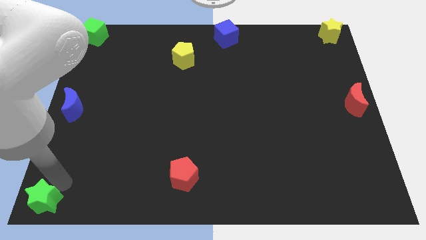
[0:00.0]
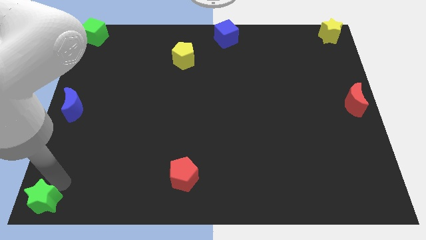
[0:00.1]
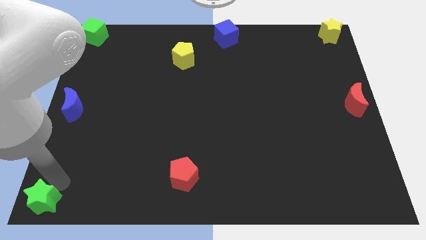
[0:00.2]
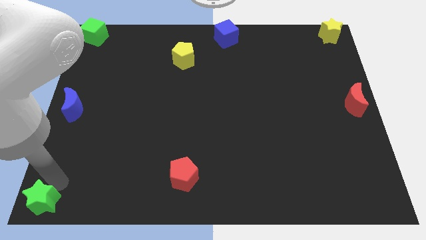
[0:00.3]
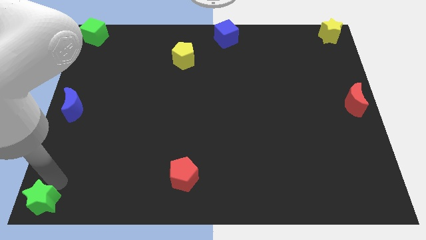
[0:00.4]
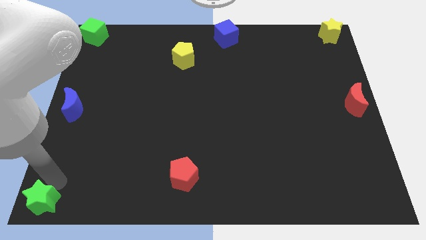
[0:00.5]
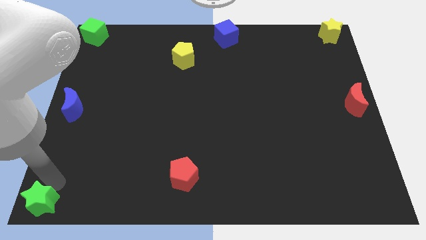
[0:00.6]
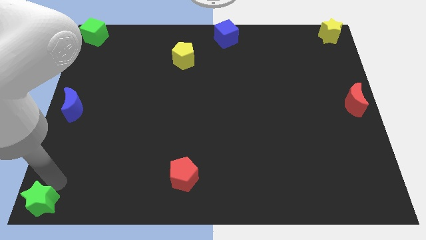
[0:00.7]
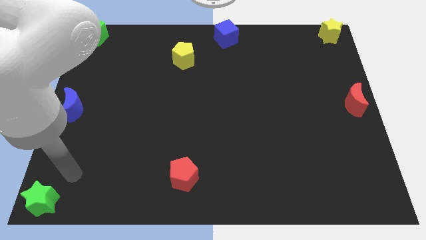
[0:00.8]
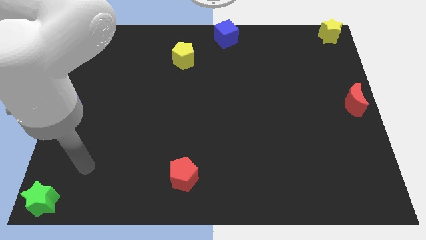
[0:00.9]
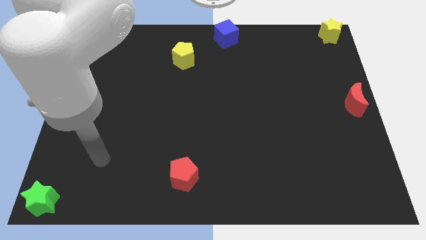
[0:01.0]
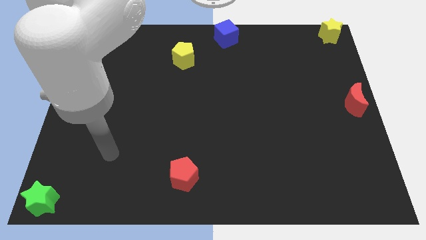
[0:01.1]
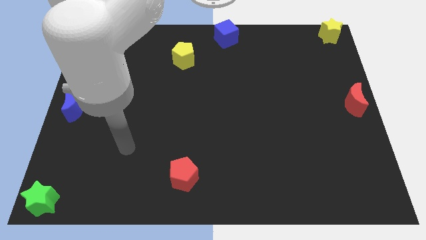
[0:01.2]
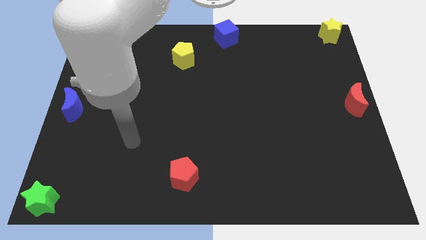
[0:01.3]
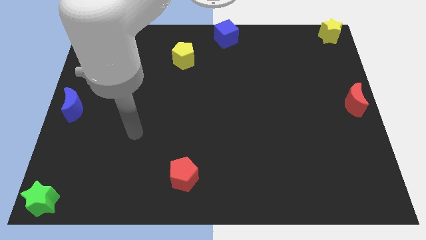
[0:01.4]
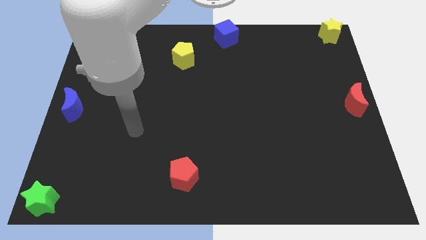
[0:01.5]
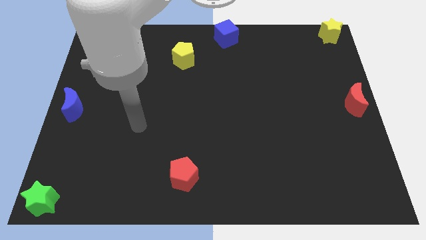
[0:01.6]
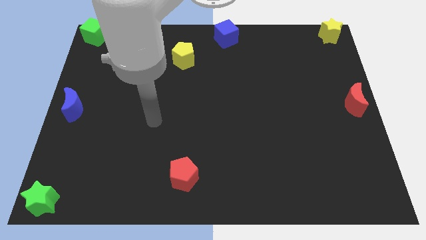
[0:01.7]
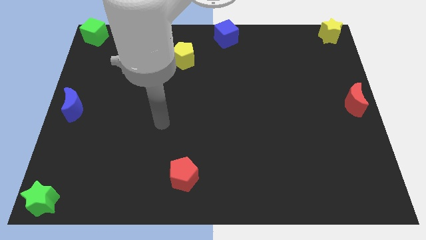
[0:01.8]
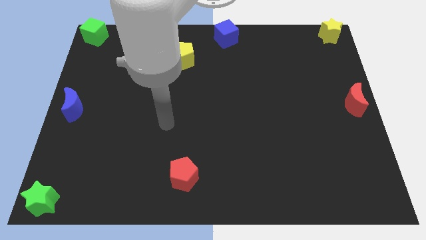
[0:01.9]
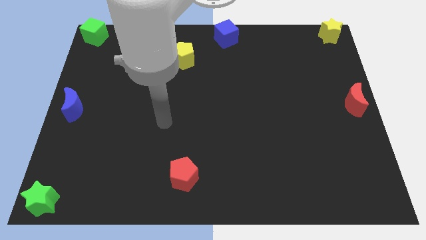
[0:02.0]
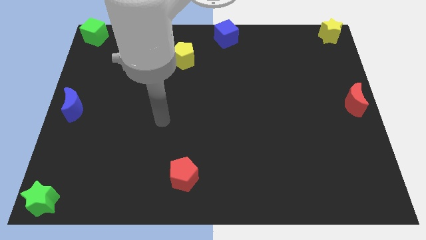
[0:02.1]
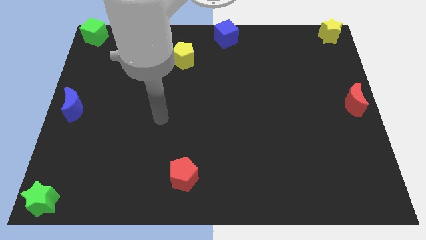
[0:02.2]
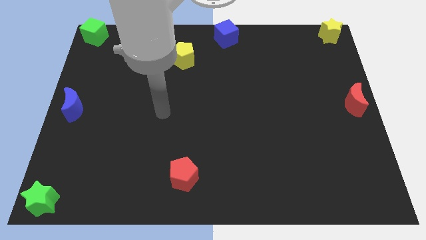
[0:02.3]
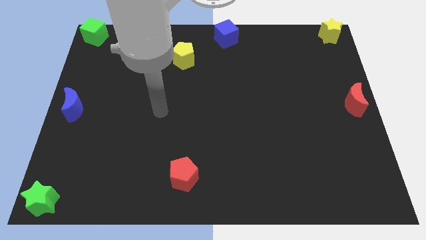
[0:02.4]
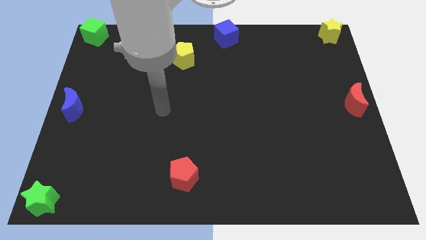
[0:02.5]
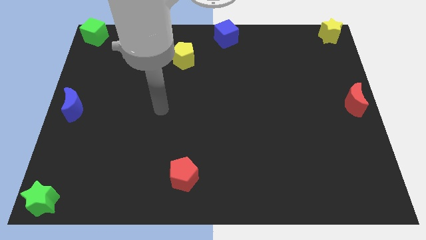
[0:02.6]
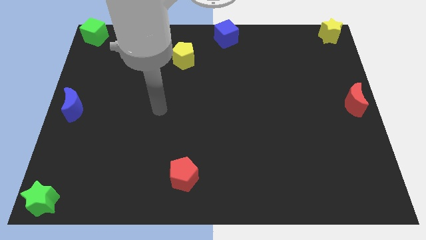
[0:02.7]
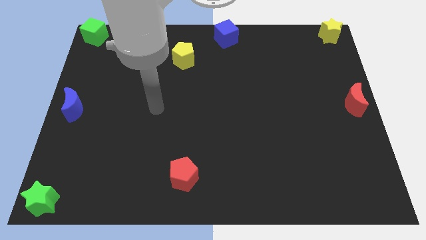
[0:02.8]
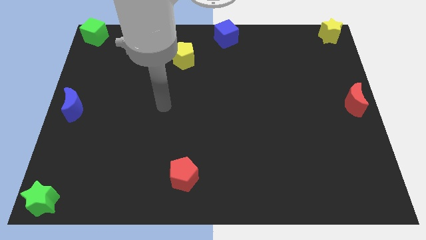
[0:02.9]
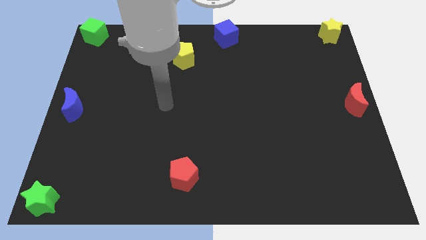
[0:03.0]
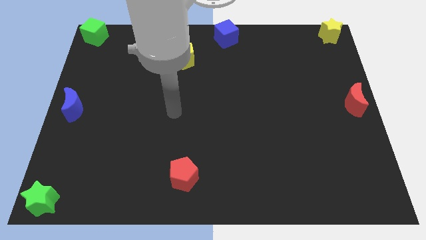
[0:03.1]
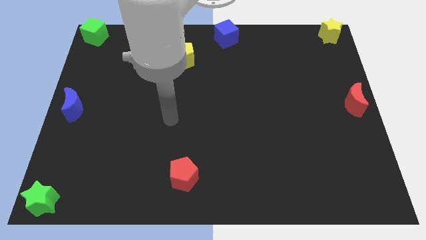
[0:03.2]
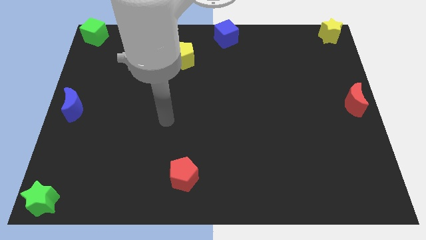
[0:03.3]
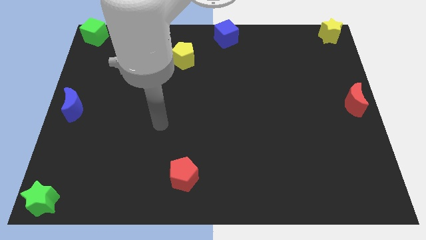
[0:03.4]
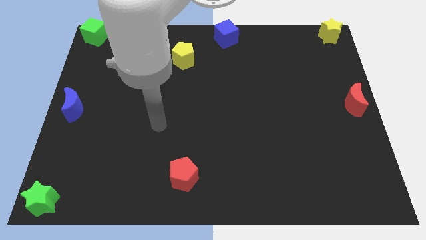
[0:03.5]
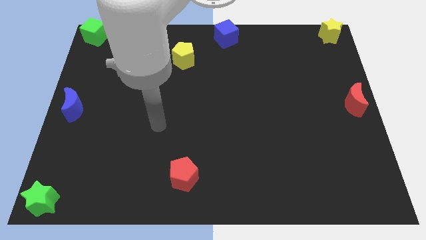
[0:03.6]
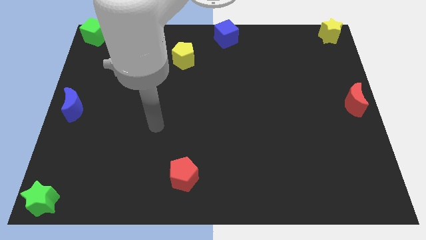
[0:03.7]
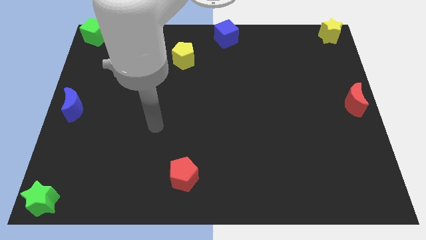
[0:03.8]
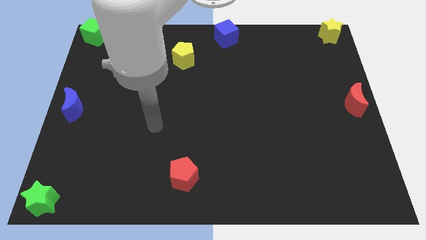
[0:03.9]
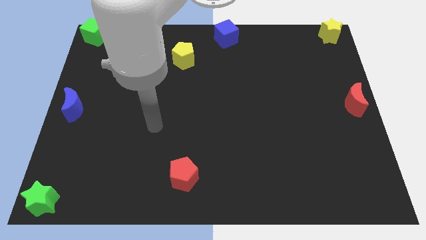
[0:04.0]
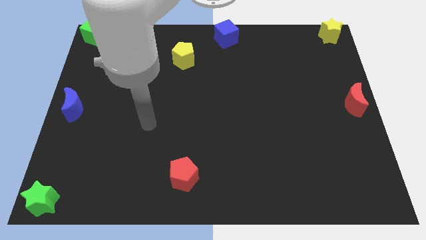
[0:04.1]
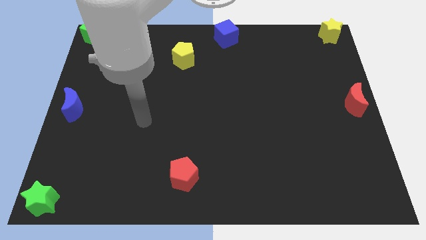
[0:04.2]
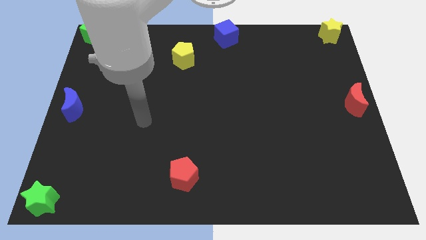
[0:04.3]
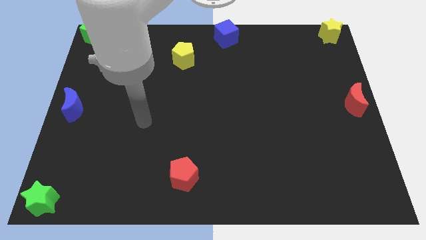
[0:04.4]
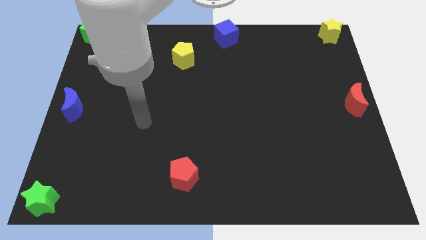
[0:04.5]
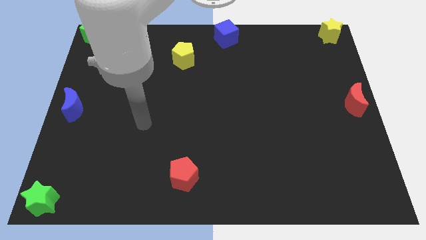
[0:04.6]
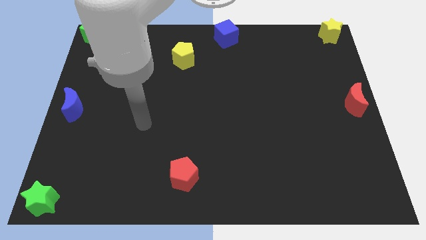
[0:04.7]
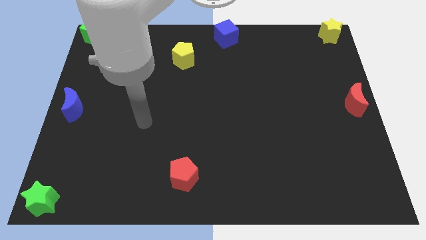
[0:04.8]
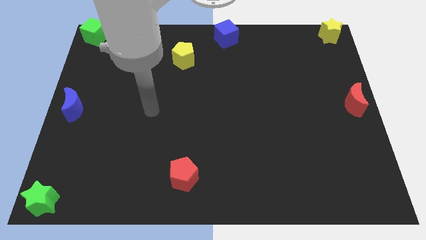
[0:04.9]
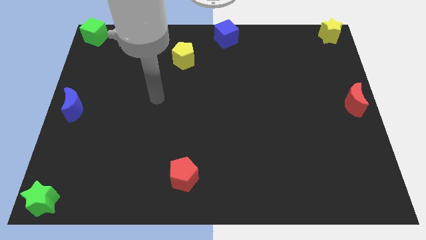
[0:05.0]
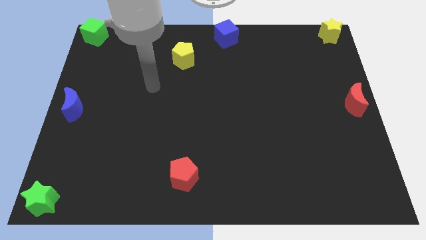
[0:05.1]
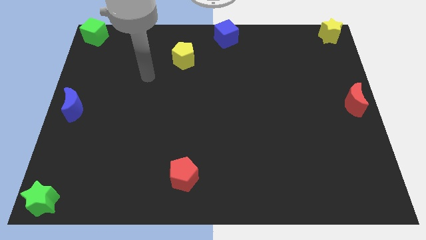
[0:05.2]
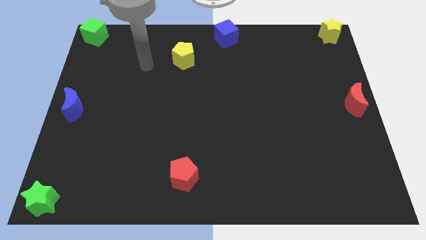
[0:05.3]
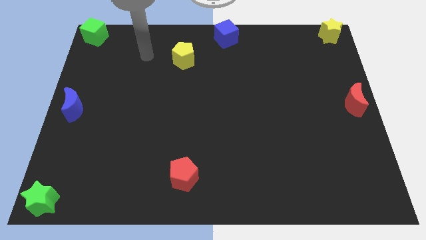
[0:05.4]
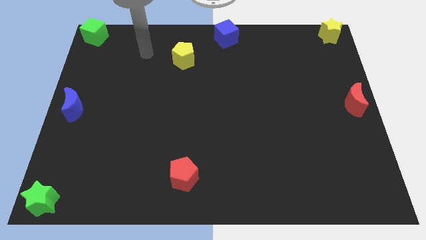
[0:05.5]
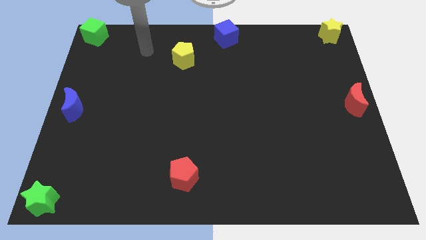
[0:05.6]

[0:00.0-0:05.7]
move arm towards the left of the yellow pentagon

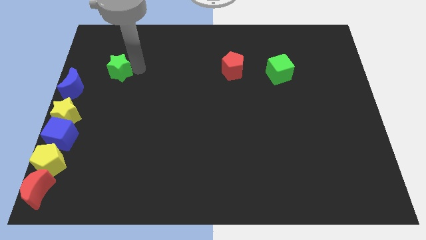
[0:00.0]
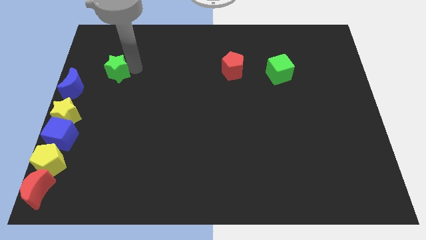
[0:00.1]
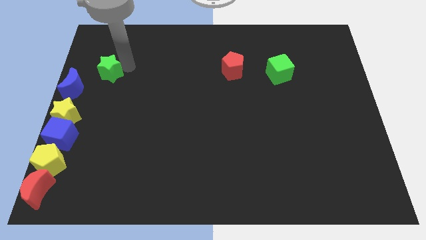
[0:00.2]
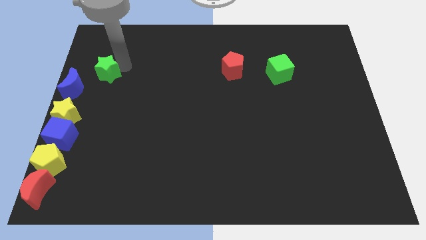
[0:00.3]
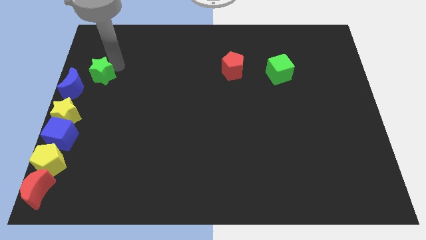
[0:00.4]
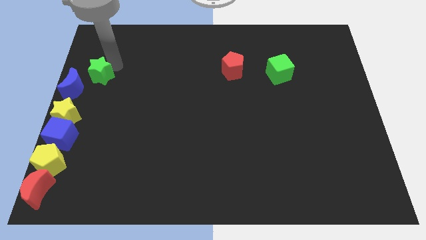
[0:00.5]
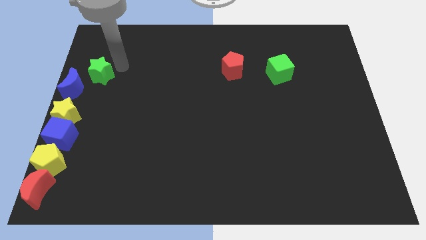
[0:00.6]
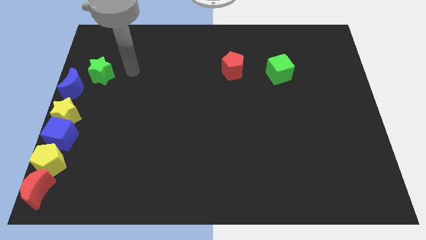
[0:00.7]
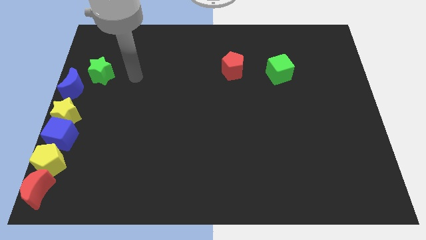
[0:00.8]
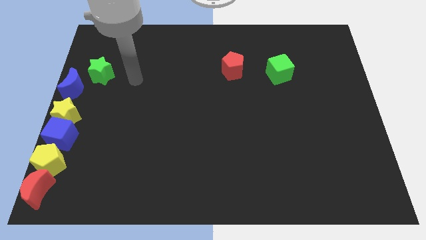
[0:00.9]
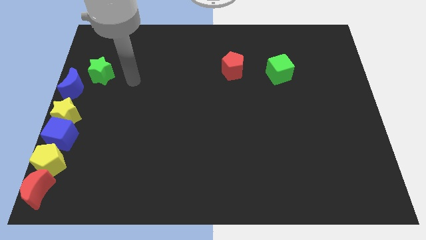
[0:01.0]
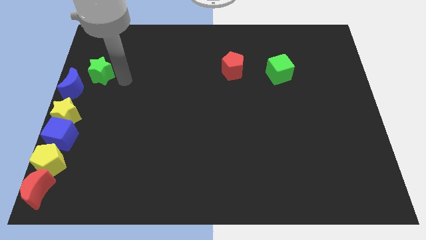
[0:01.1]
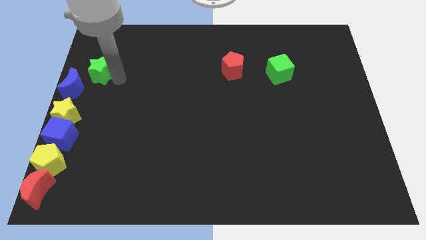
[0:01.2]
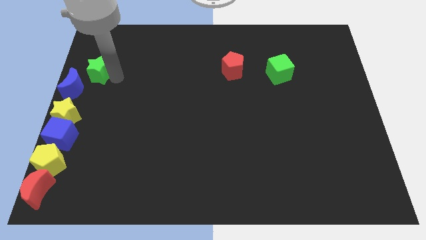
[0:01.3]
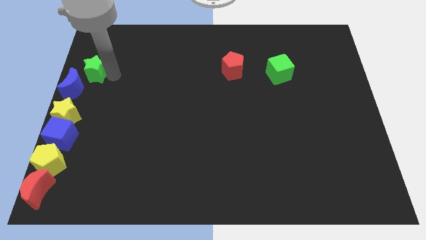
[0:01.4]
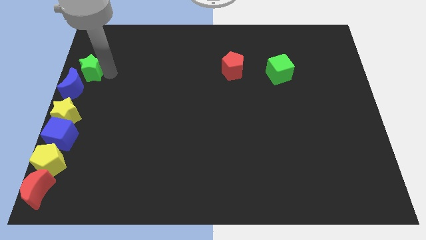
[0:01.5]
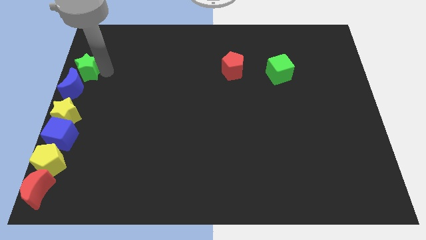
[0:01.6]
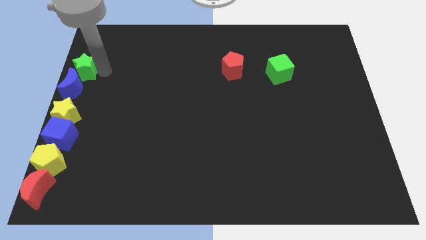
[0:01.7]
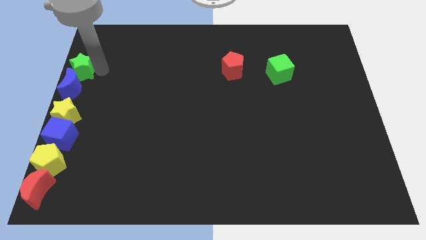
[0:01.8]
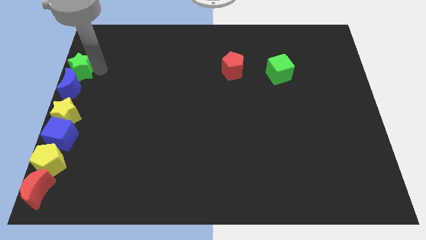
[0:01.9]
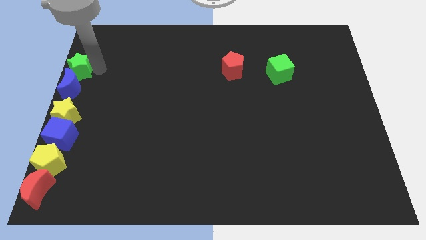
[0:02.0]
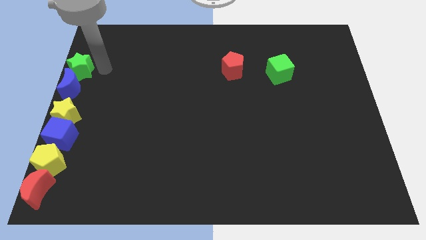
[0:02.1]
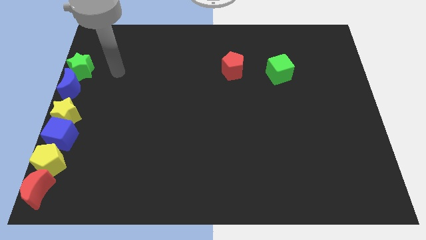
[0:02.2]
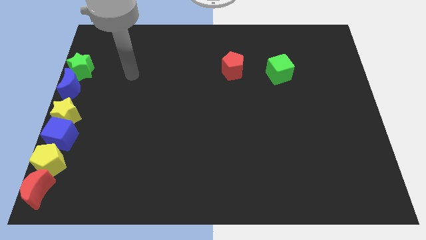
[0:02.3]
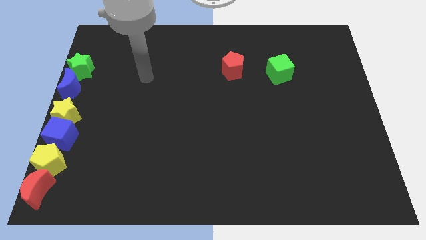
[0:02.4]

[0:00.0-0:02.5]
move the green star above the blue moon

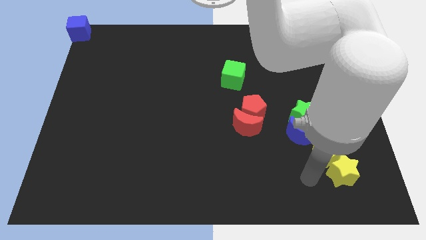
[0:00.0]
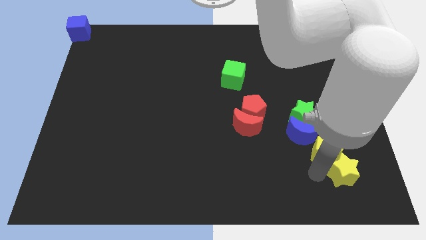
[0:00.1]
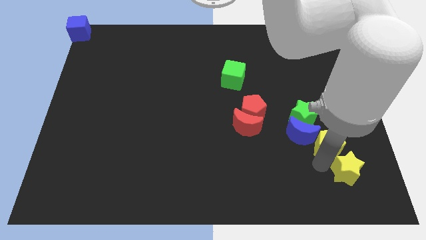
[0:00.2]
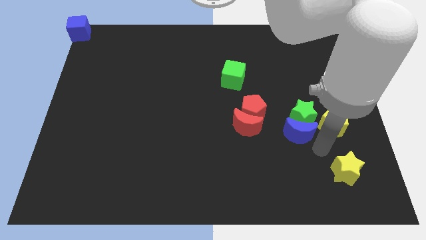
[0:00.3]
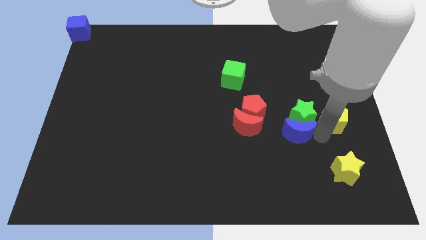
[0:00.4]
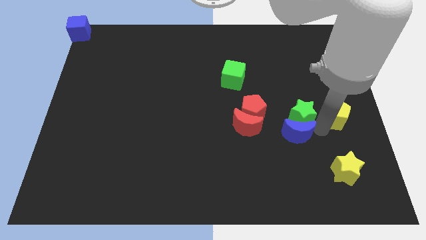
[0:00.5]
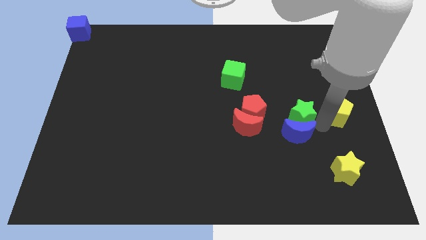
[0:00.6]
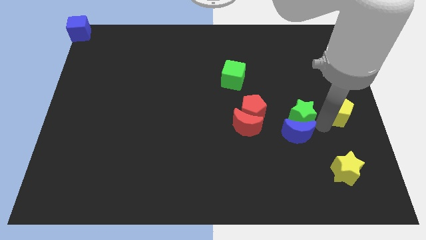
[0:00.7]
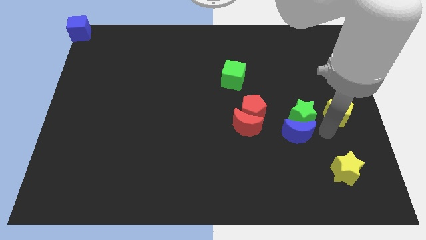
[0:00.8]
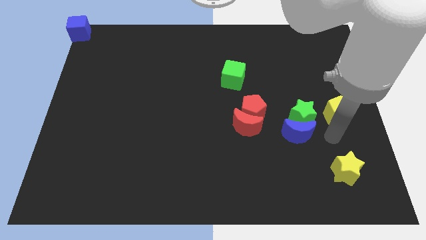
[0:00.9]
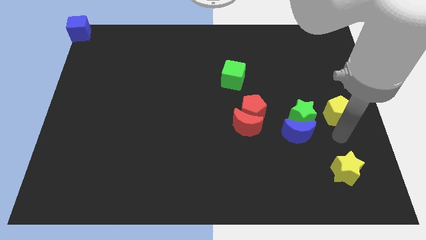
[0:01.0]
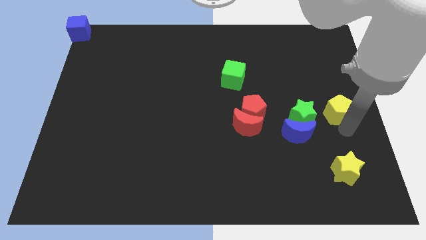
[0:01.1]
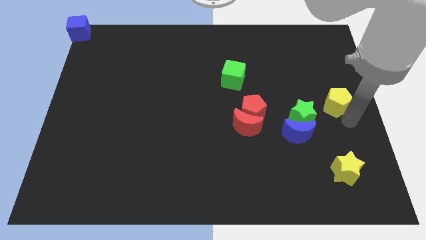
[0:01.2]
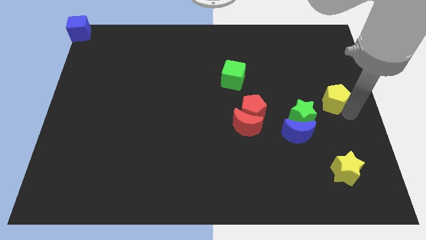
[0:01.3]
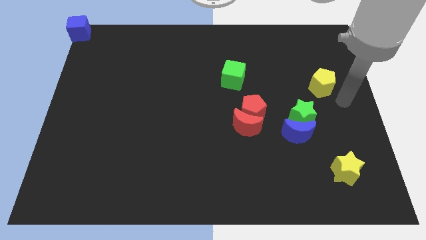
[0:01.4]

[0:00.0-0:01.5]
separate the yellow pentagon from the yellow star
